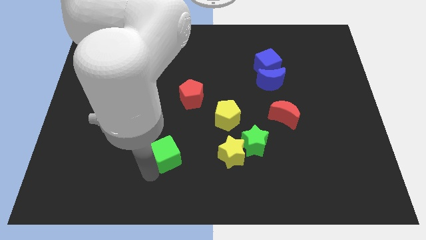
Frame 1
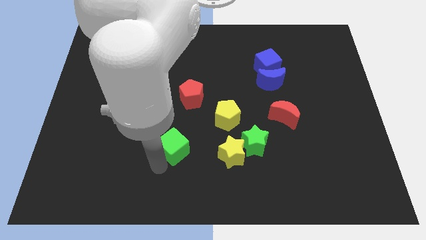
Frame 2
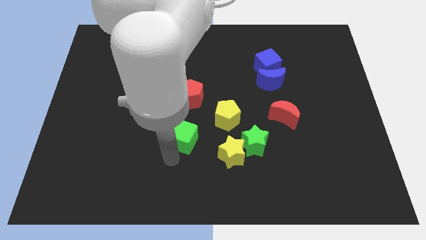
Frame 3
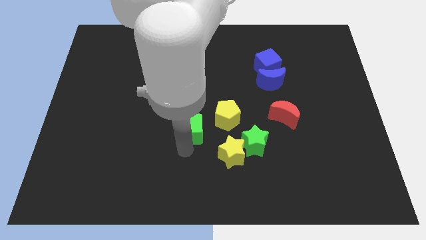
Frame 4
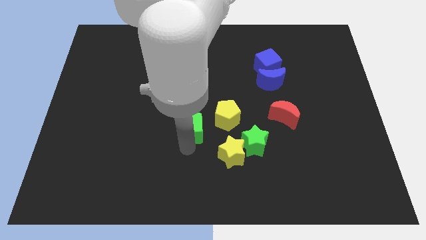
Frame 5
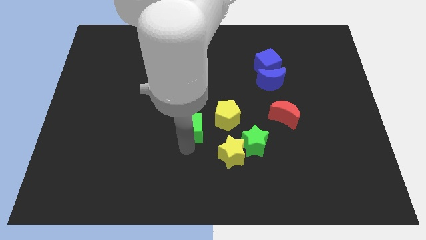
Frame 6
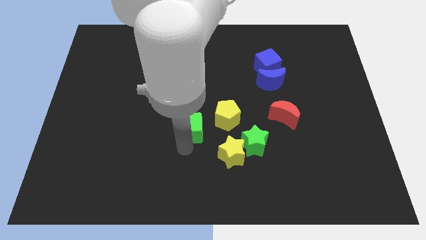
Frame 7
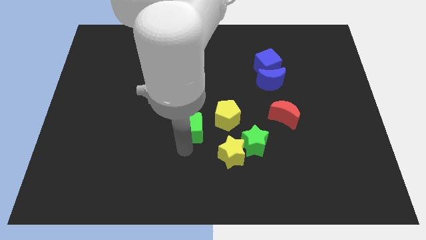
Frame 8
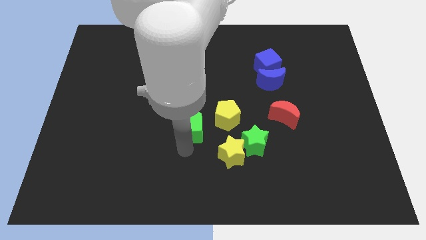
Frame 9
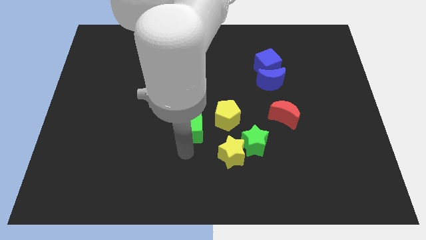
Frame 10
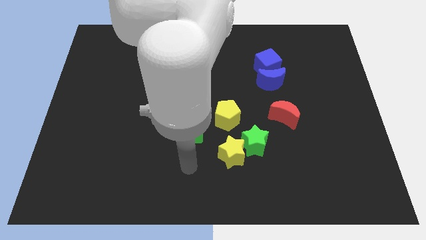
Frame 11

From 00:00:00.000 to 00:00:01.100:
place green cube vertically below red pentagon

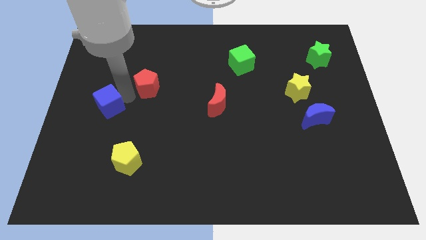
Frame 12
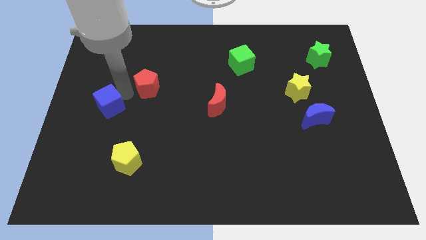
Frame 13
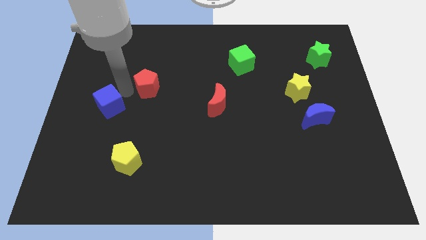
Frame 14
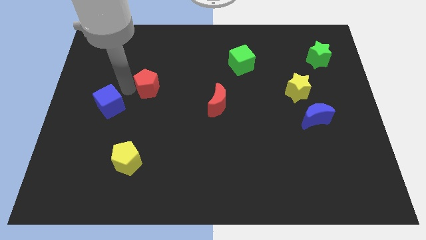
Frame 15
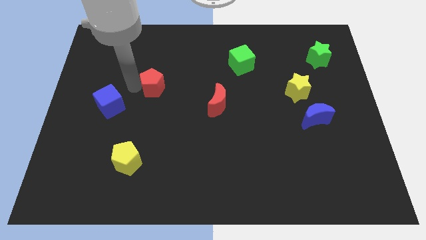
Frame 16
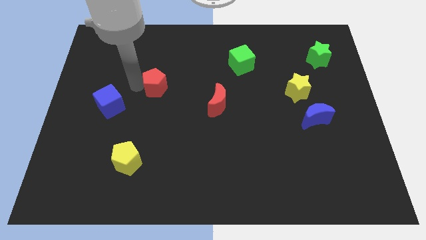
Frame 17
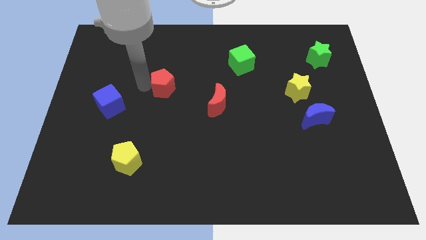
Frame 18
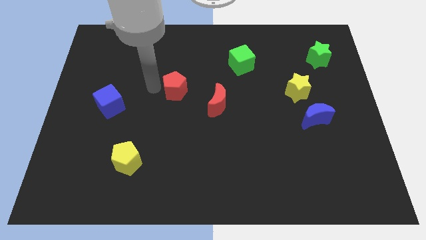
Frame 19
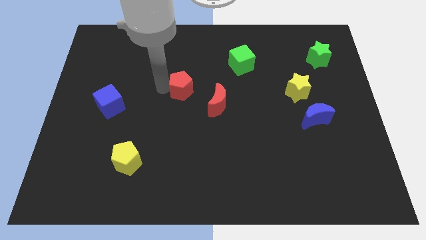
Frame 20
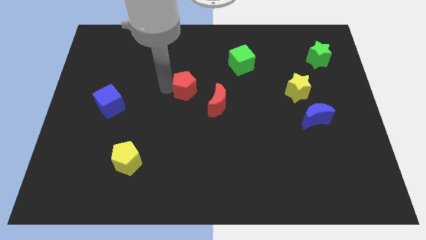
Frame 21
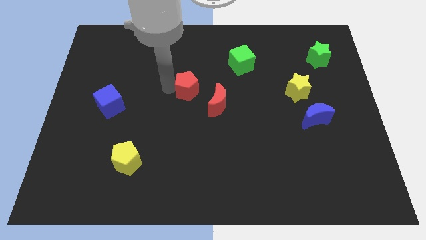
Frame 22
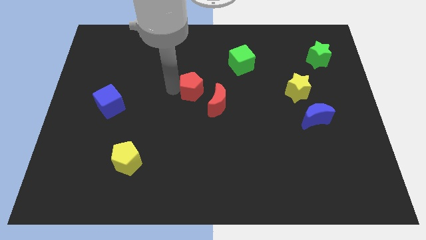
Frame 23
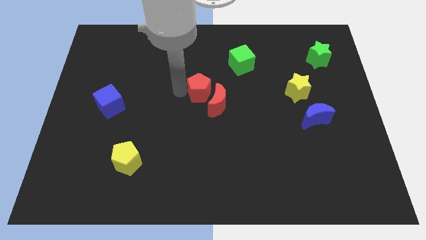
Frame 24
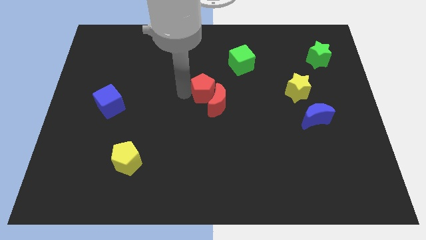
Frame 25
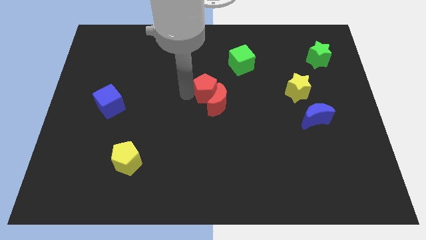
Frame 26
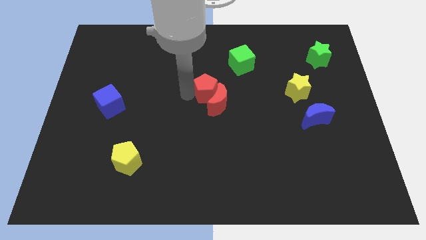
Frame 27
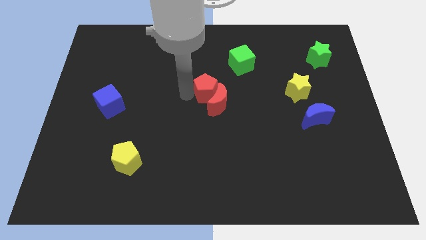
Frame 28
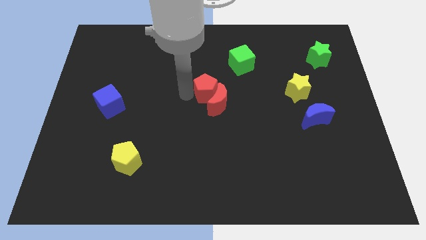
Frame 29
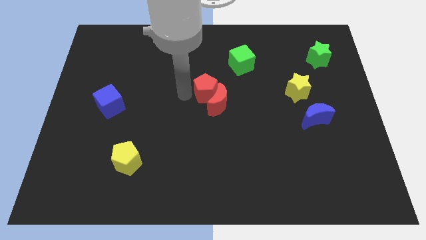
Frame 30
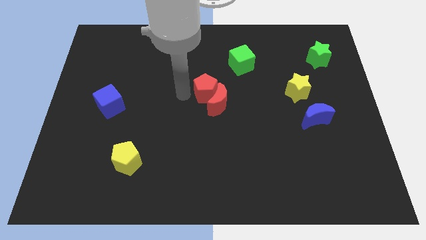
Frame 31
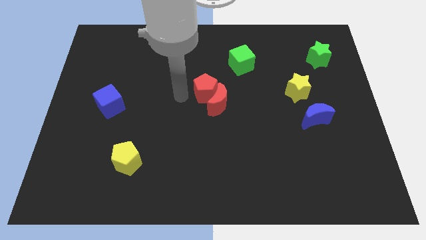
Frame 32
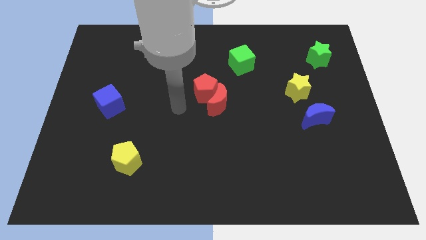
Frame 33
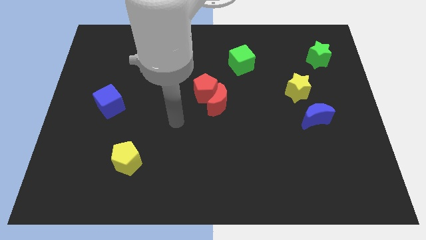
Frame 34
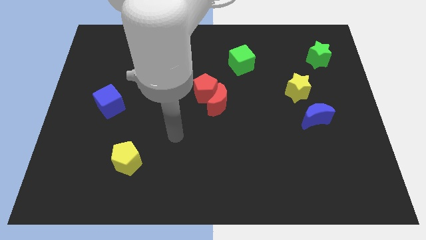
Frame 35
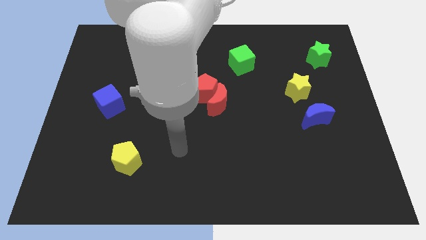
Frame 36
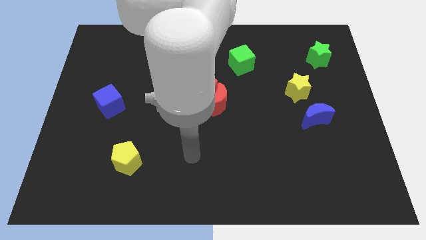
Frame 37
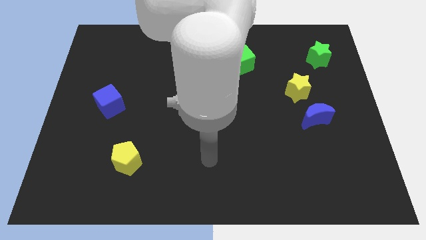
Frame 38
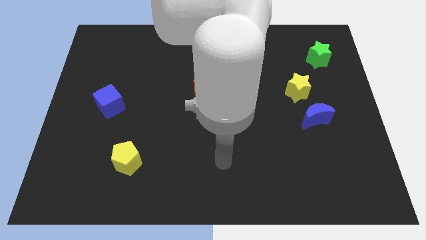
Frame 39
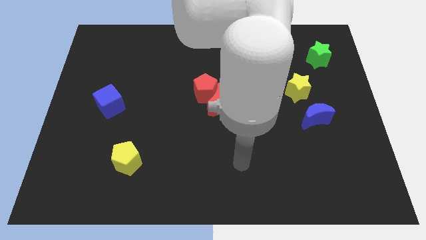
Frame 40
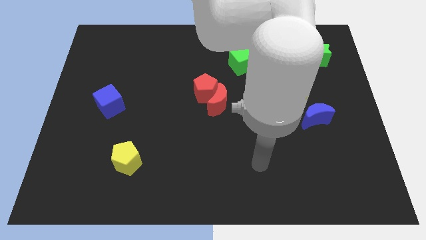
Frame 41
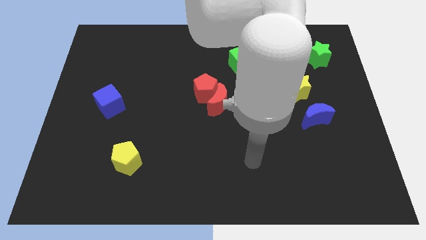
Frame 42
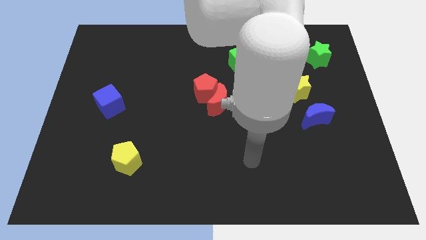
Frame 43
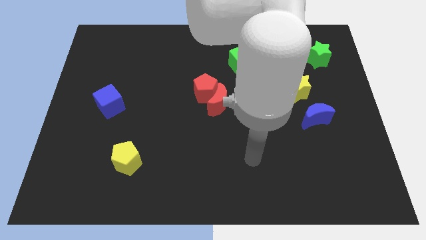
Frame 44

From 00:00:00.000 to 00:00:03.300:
move red pentagon into red moon

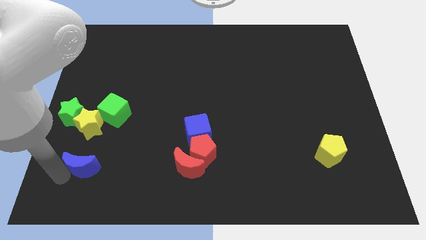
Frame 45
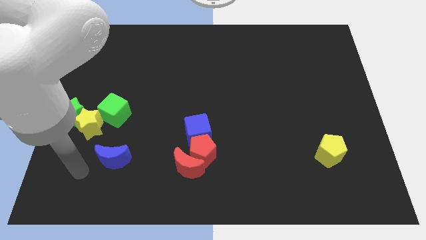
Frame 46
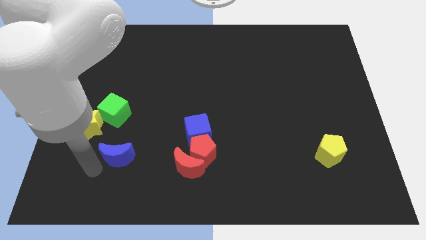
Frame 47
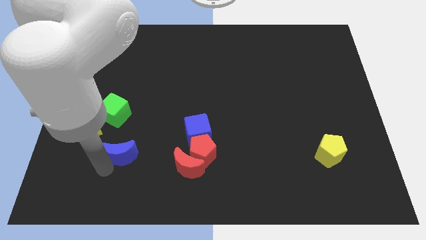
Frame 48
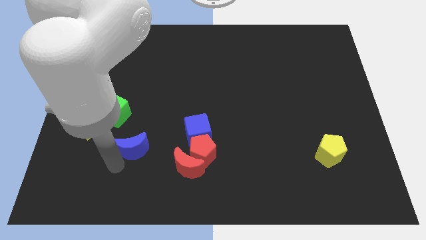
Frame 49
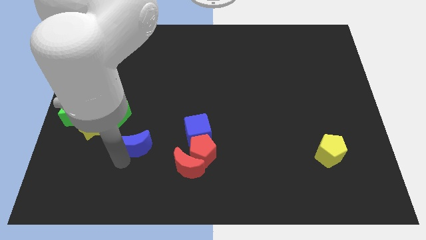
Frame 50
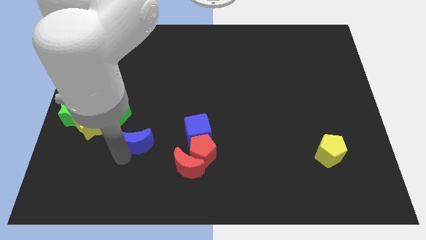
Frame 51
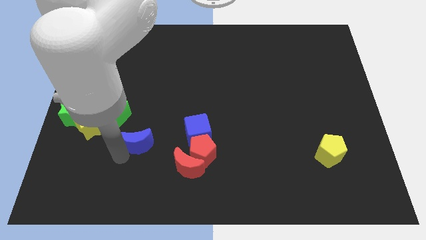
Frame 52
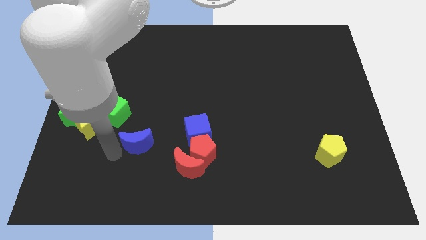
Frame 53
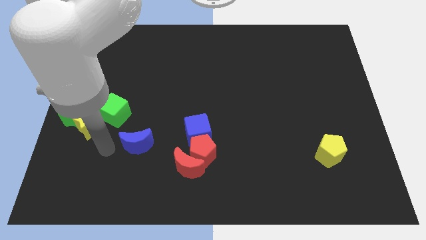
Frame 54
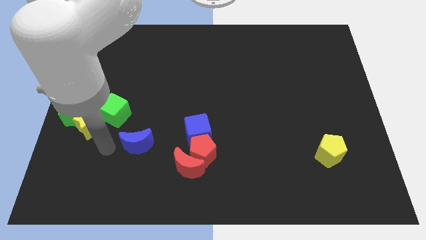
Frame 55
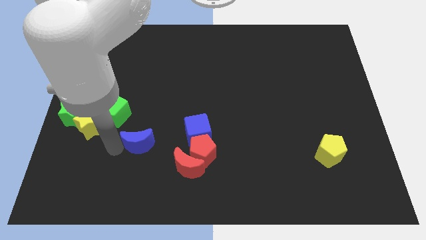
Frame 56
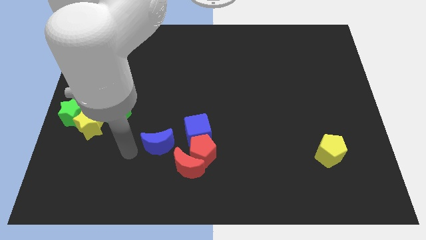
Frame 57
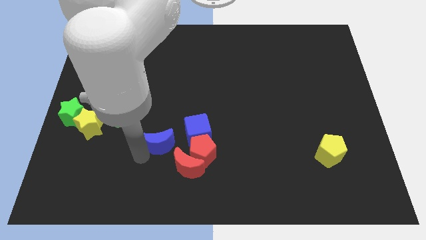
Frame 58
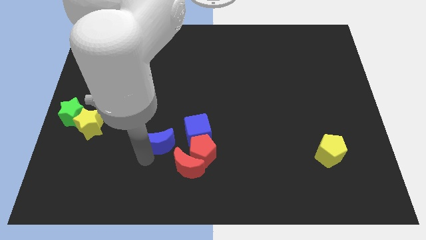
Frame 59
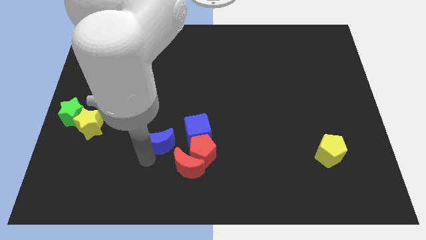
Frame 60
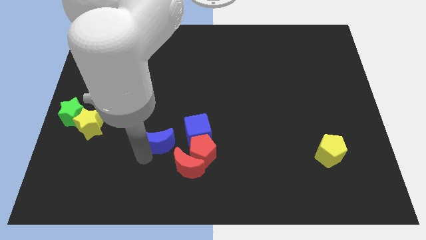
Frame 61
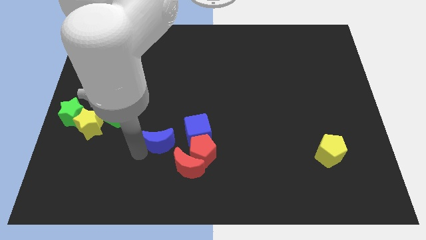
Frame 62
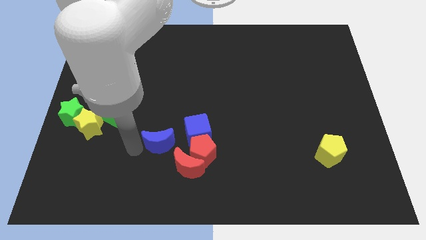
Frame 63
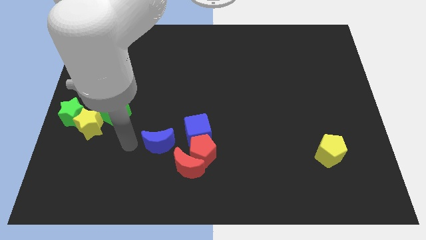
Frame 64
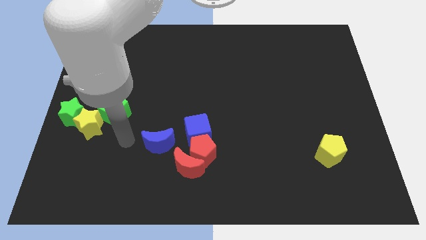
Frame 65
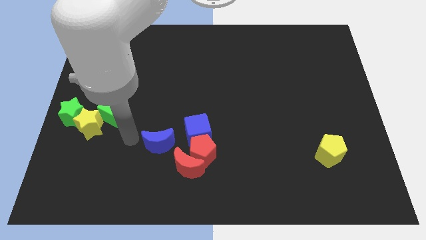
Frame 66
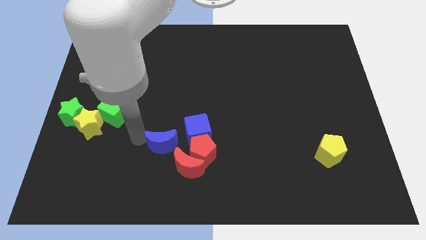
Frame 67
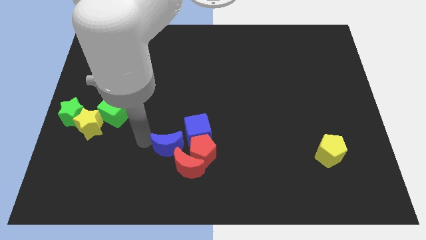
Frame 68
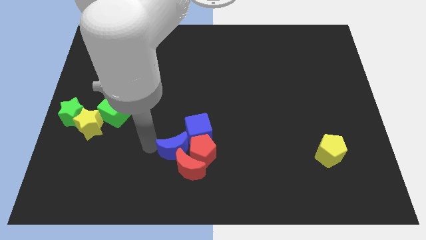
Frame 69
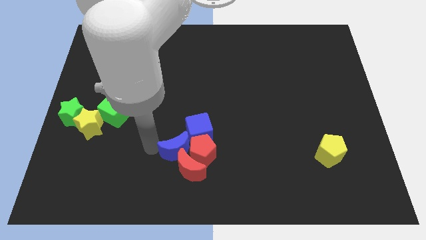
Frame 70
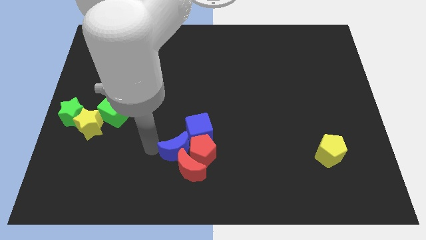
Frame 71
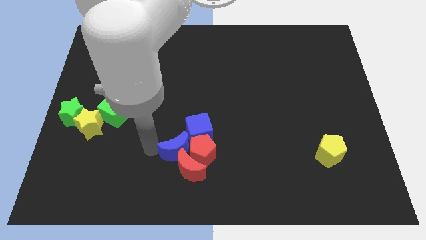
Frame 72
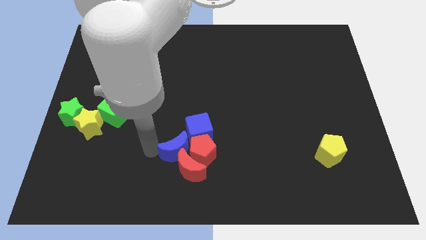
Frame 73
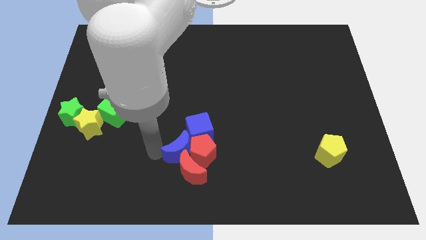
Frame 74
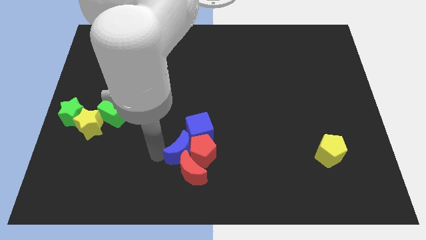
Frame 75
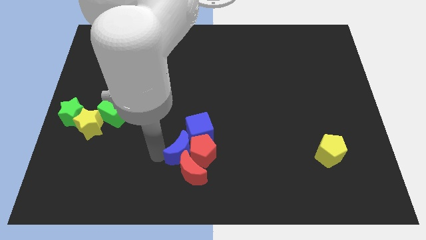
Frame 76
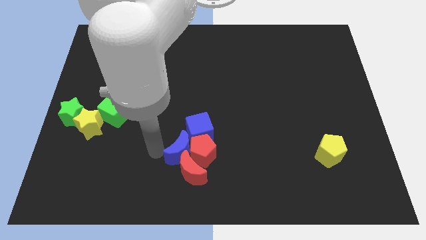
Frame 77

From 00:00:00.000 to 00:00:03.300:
move the blue crescent towards the left of red pentagon

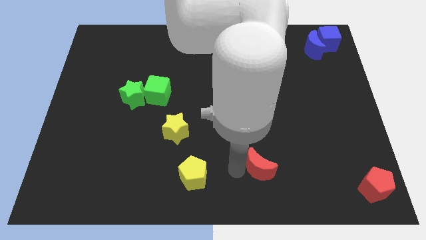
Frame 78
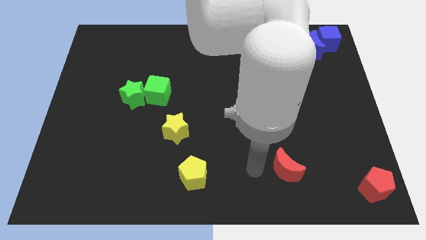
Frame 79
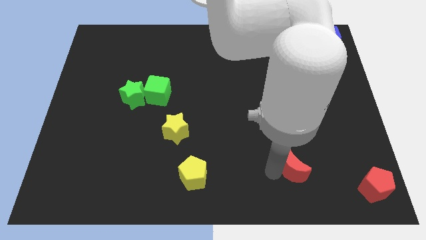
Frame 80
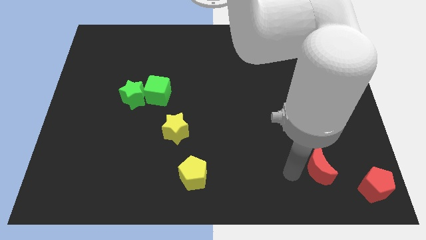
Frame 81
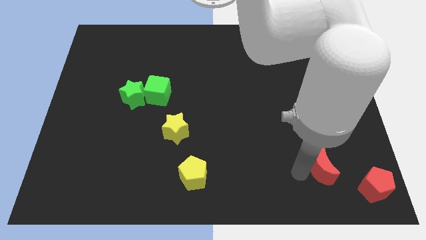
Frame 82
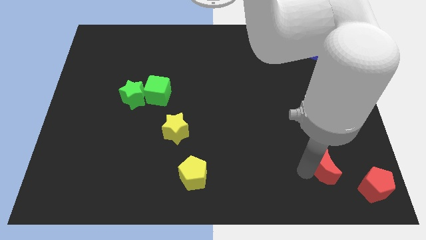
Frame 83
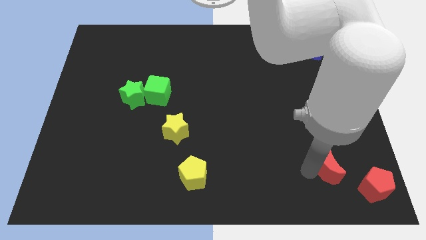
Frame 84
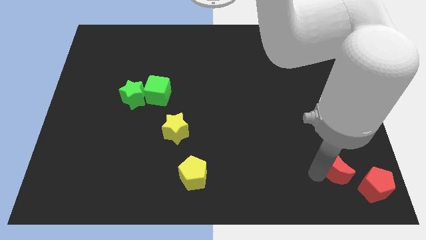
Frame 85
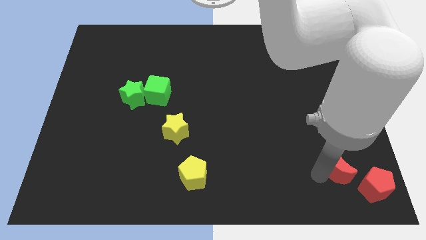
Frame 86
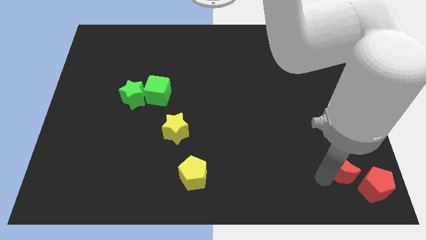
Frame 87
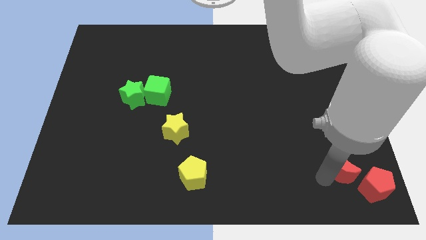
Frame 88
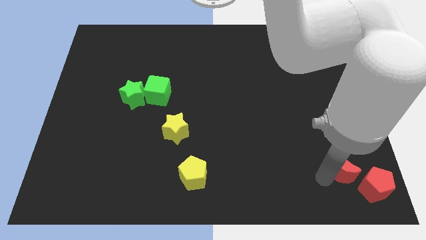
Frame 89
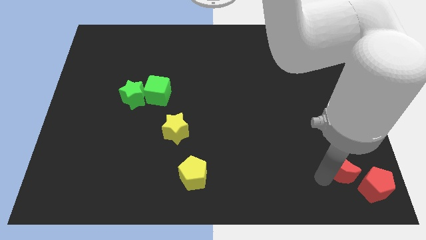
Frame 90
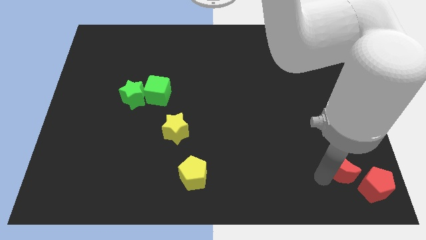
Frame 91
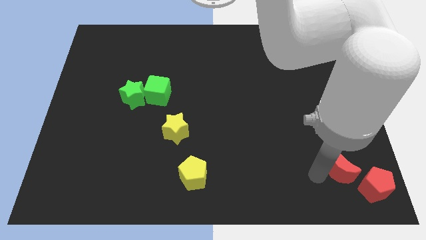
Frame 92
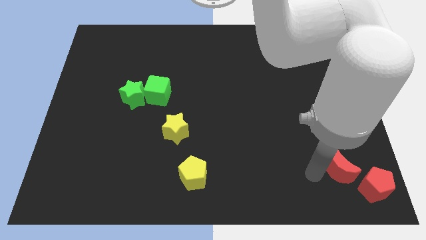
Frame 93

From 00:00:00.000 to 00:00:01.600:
place red crescent beside red pentagon
